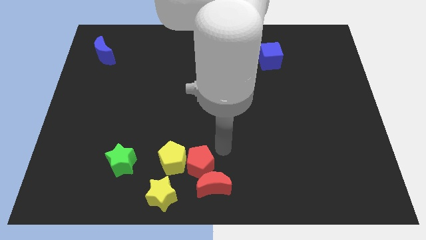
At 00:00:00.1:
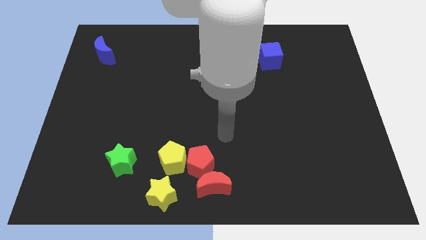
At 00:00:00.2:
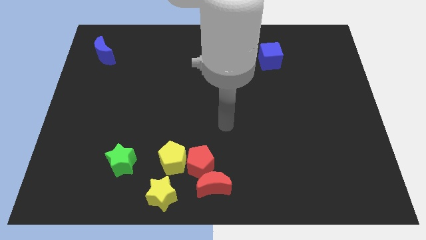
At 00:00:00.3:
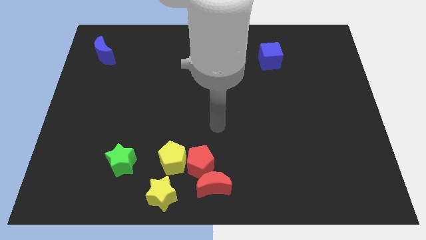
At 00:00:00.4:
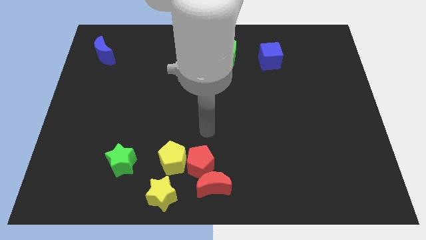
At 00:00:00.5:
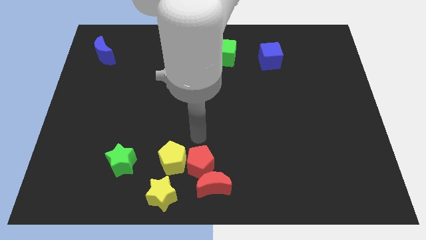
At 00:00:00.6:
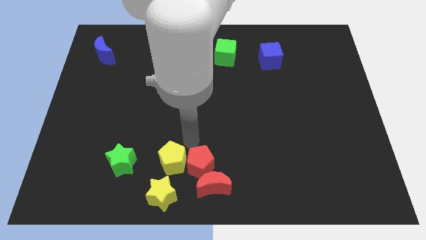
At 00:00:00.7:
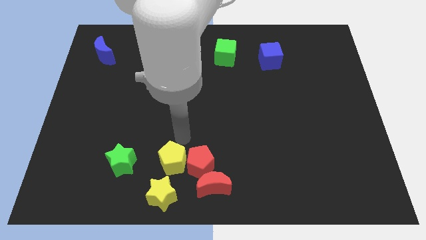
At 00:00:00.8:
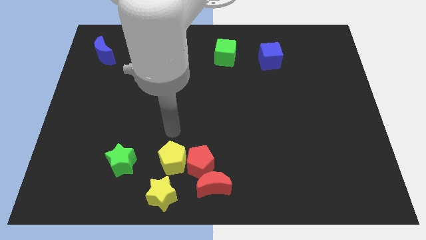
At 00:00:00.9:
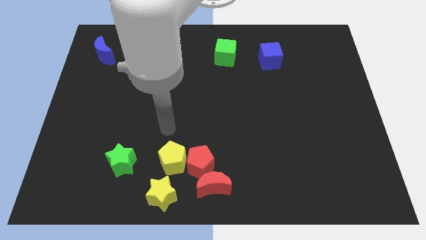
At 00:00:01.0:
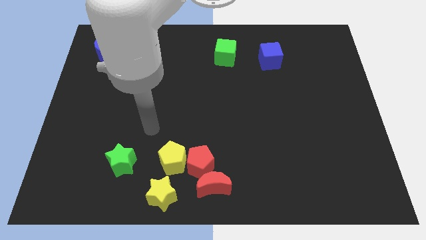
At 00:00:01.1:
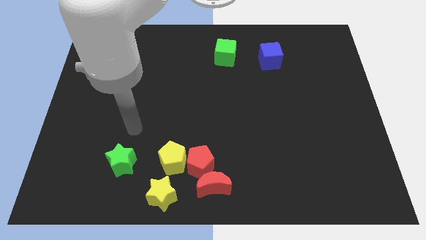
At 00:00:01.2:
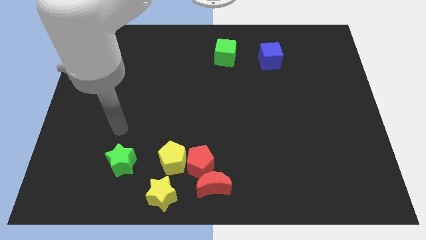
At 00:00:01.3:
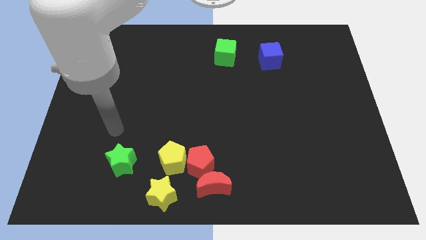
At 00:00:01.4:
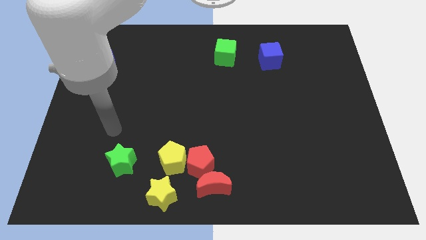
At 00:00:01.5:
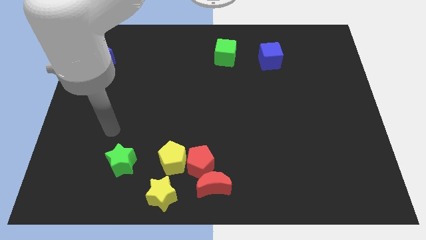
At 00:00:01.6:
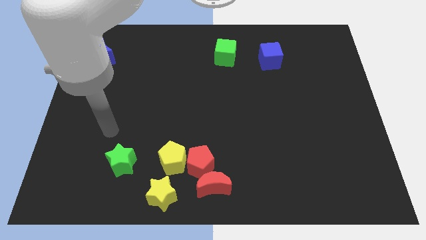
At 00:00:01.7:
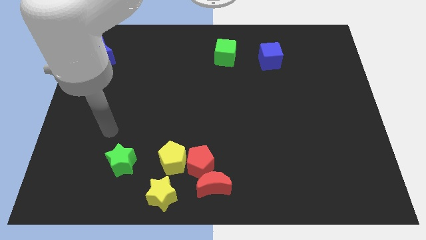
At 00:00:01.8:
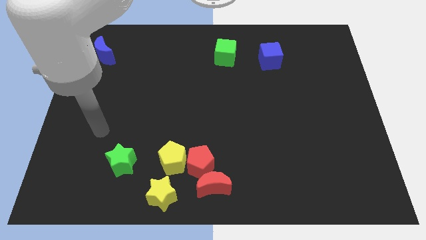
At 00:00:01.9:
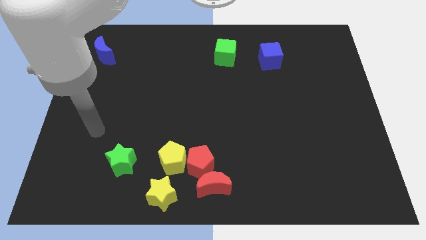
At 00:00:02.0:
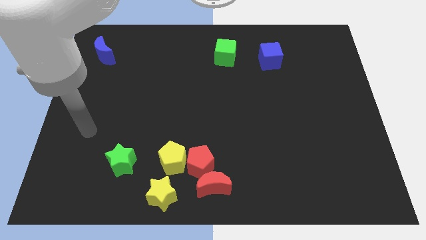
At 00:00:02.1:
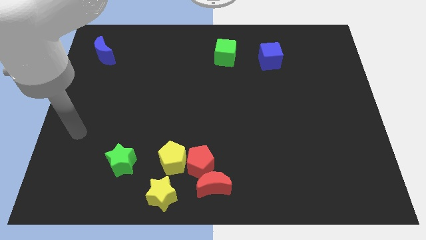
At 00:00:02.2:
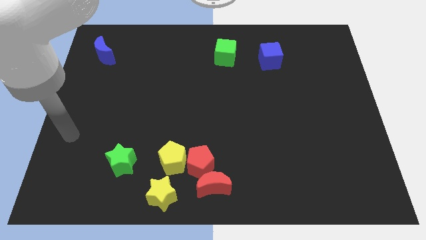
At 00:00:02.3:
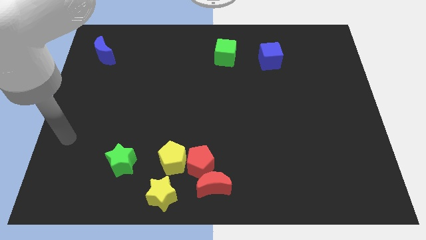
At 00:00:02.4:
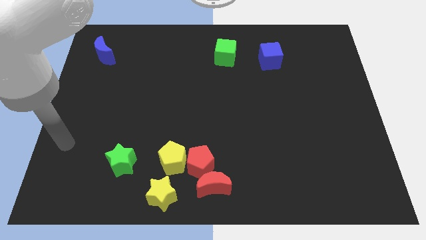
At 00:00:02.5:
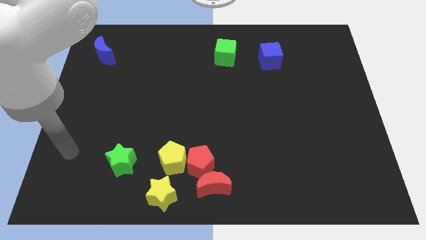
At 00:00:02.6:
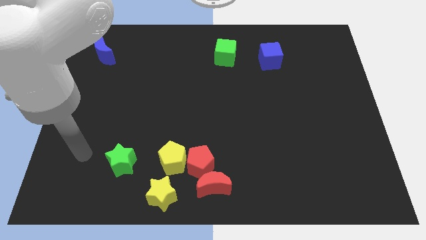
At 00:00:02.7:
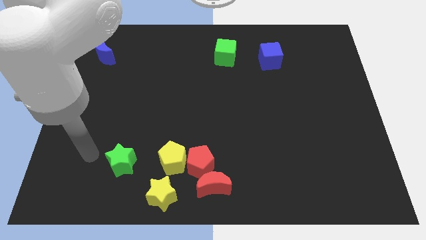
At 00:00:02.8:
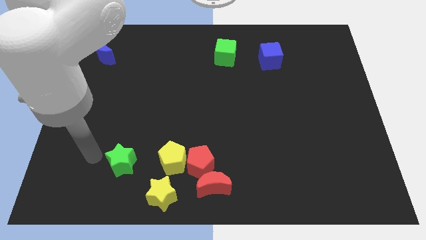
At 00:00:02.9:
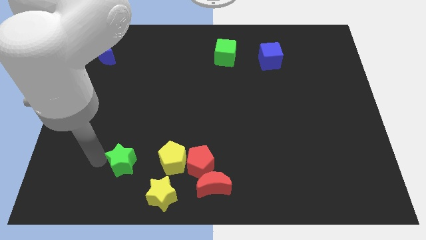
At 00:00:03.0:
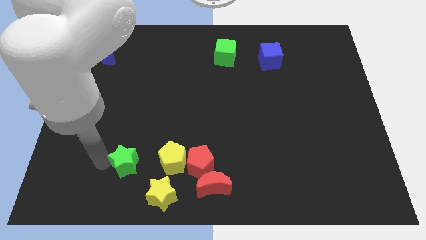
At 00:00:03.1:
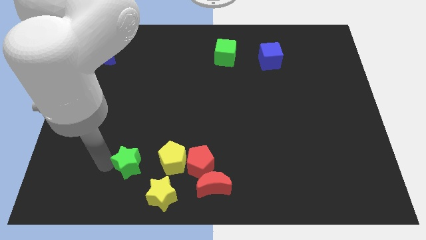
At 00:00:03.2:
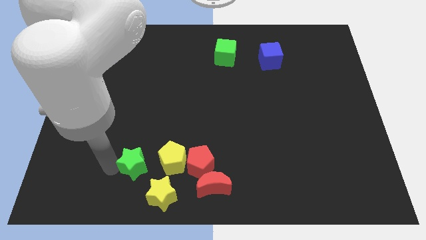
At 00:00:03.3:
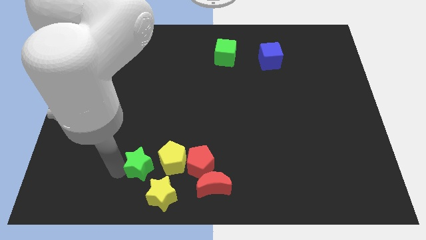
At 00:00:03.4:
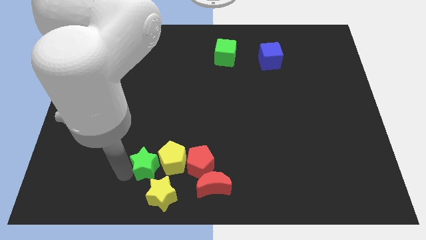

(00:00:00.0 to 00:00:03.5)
move the green star parallel to the yellow pentagon

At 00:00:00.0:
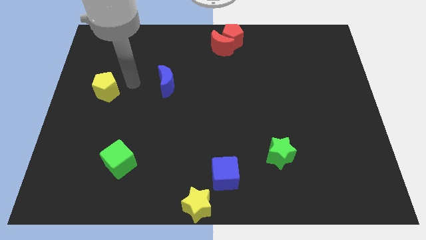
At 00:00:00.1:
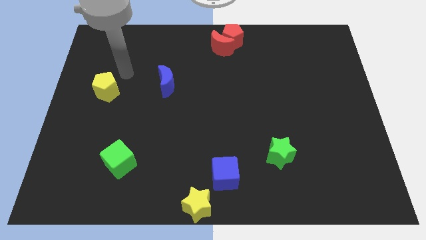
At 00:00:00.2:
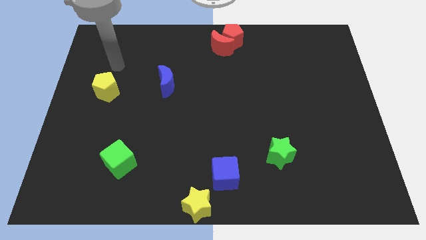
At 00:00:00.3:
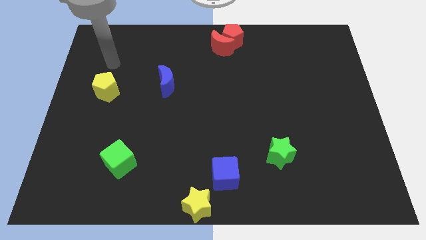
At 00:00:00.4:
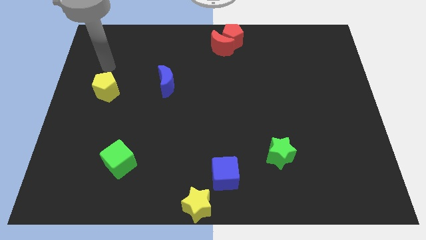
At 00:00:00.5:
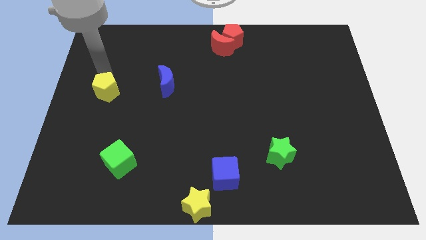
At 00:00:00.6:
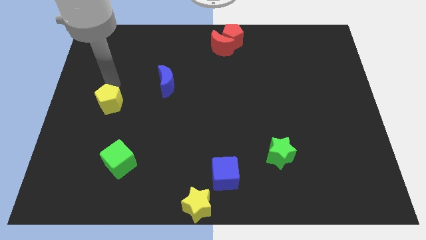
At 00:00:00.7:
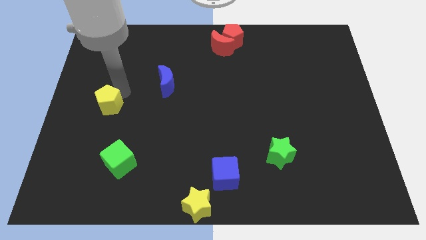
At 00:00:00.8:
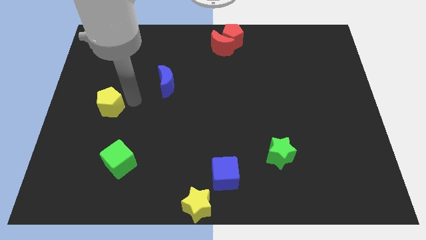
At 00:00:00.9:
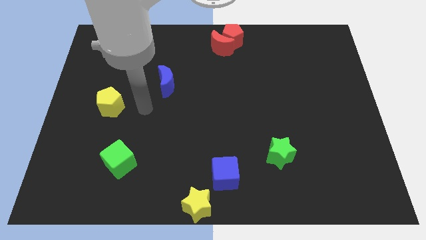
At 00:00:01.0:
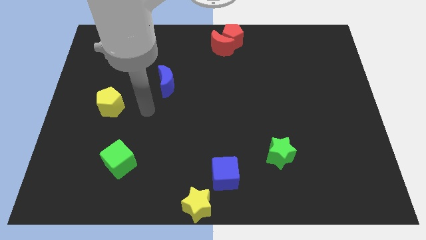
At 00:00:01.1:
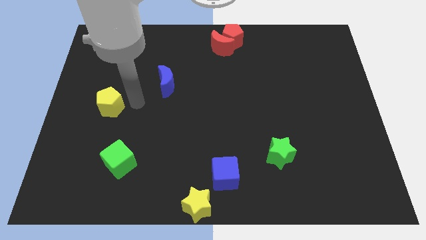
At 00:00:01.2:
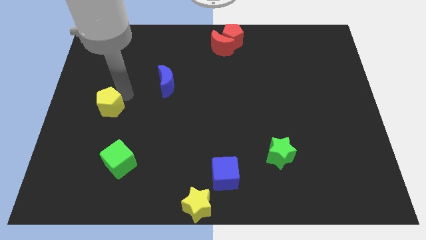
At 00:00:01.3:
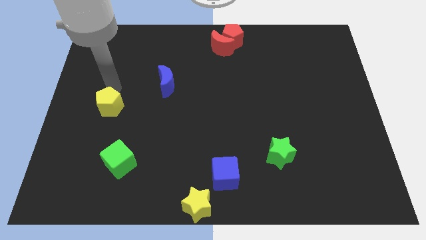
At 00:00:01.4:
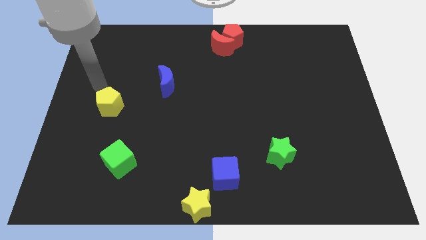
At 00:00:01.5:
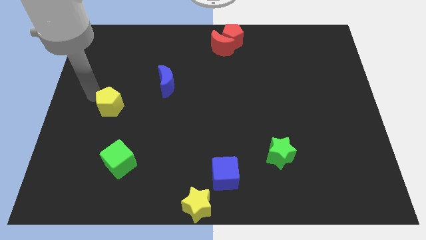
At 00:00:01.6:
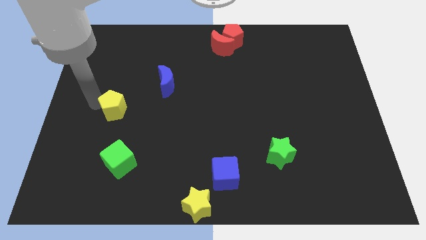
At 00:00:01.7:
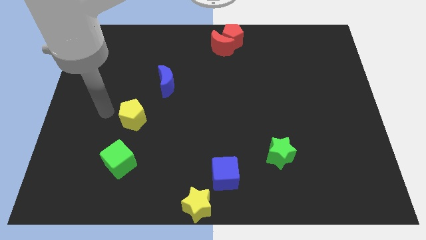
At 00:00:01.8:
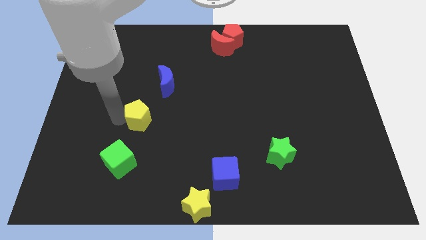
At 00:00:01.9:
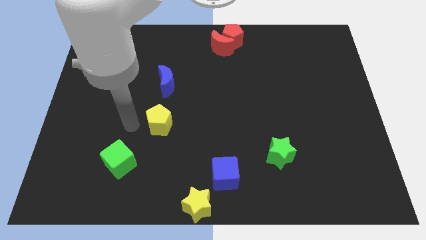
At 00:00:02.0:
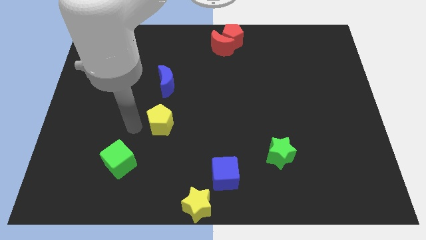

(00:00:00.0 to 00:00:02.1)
move yellow pentagon towards the green cube

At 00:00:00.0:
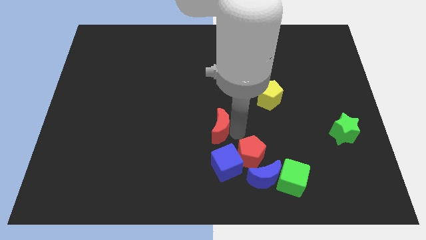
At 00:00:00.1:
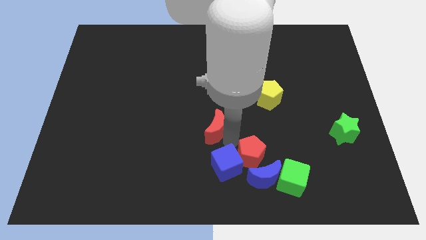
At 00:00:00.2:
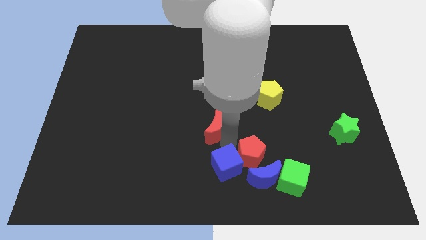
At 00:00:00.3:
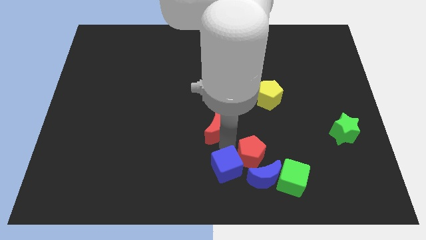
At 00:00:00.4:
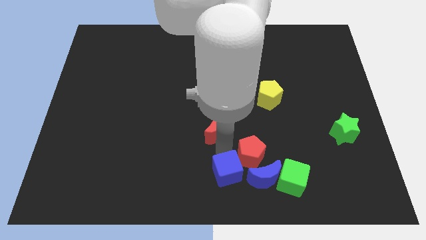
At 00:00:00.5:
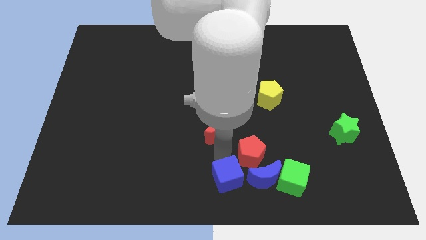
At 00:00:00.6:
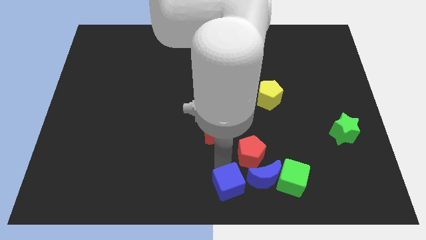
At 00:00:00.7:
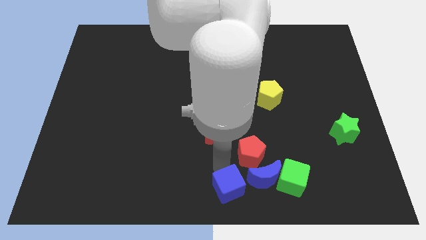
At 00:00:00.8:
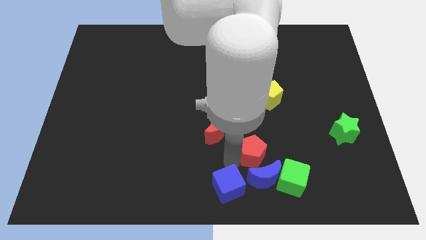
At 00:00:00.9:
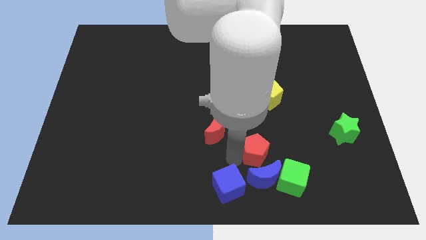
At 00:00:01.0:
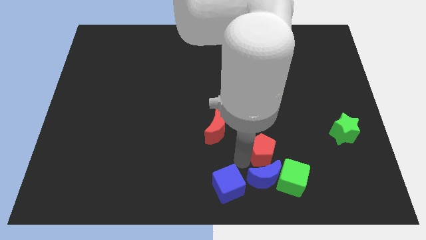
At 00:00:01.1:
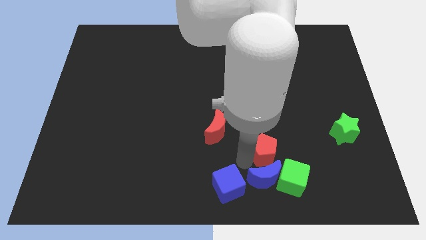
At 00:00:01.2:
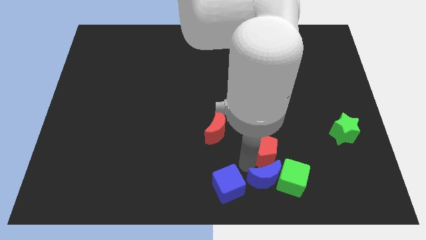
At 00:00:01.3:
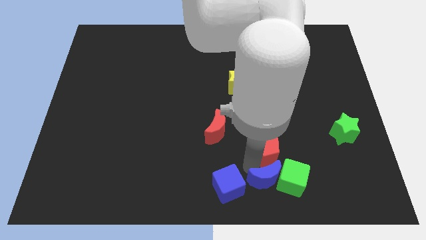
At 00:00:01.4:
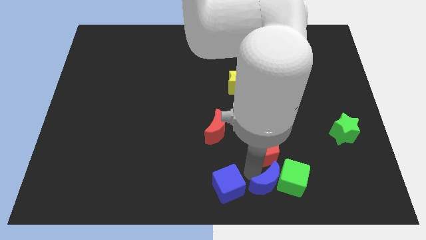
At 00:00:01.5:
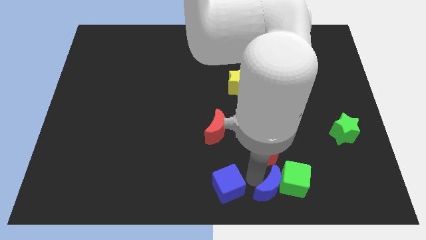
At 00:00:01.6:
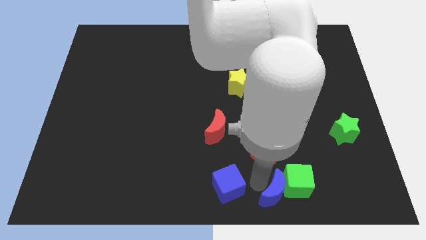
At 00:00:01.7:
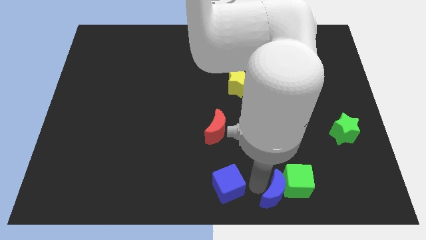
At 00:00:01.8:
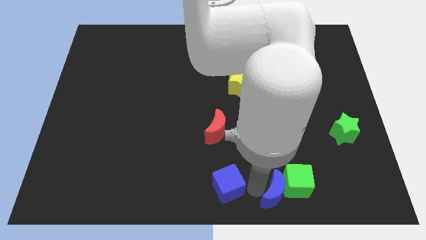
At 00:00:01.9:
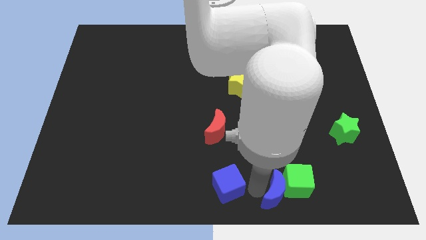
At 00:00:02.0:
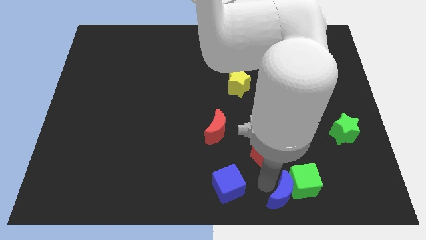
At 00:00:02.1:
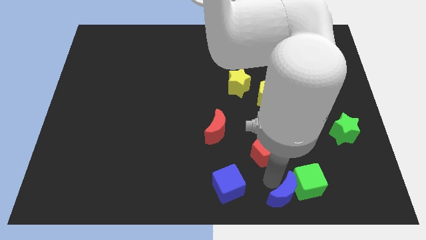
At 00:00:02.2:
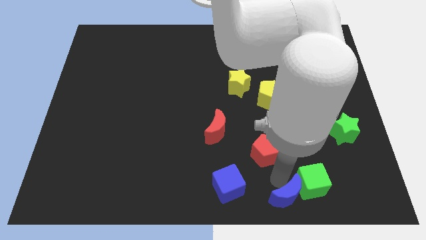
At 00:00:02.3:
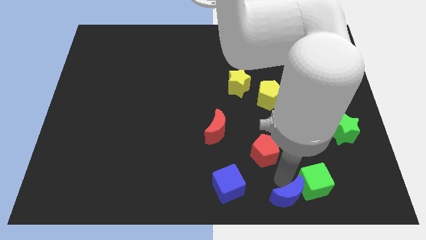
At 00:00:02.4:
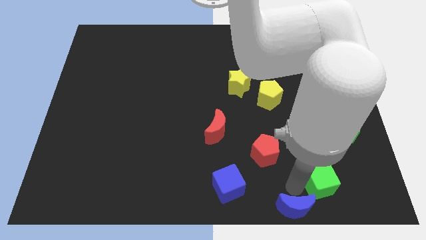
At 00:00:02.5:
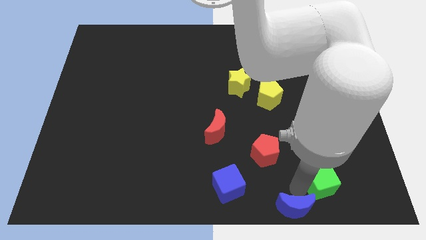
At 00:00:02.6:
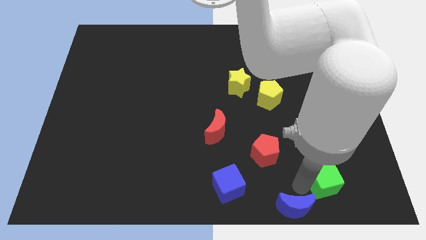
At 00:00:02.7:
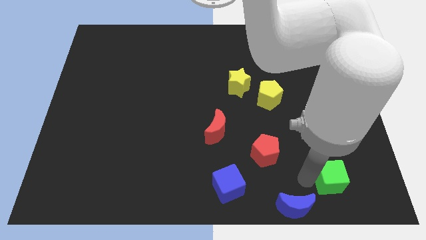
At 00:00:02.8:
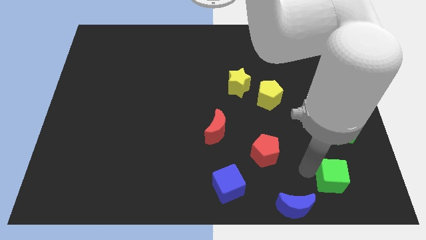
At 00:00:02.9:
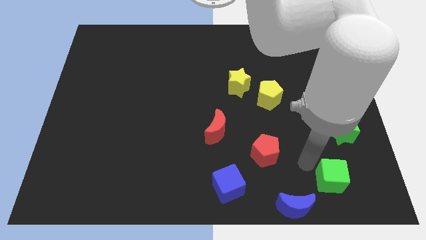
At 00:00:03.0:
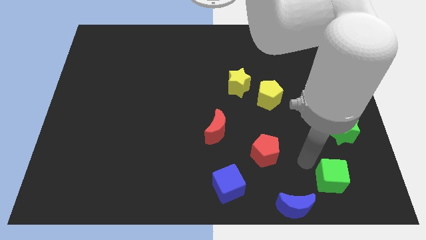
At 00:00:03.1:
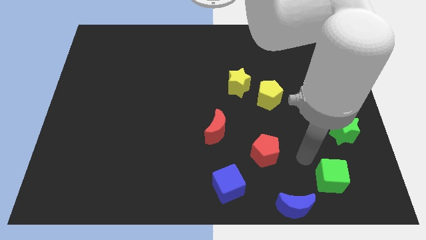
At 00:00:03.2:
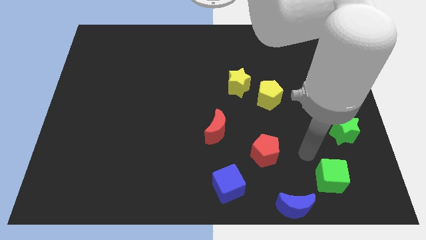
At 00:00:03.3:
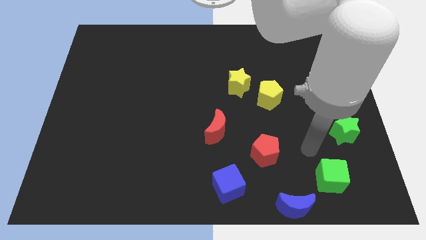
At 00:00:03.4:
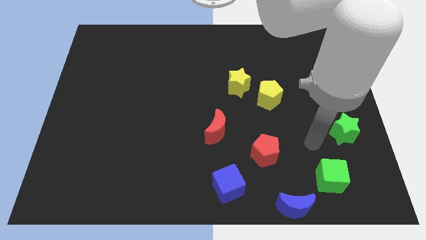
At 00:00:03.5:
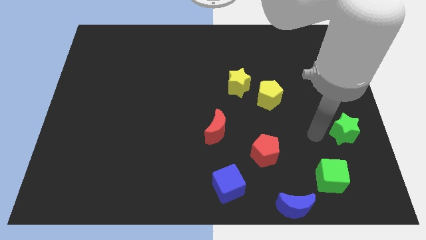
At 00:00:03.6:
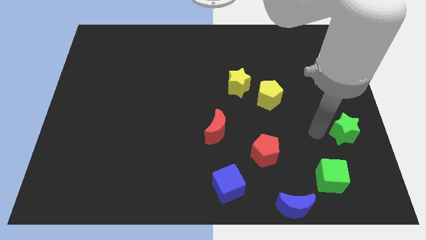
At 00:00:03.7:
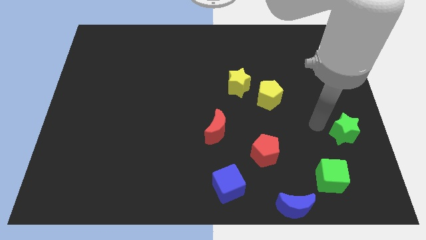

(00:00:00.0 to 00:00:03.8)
move the blue cube to the middle bottom
